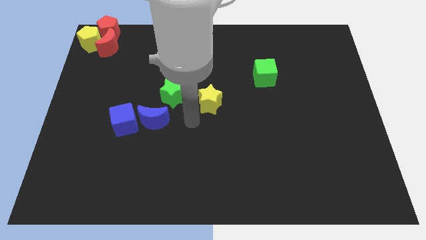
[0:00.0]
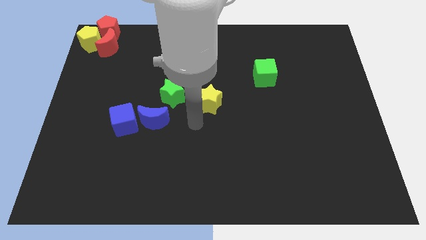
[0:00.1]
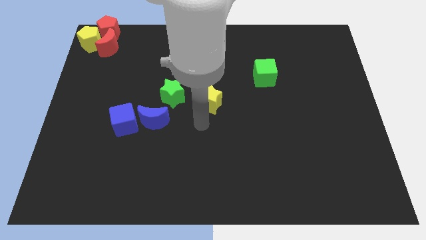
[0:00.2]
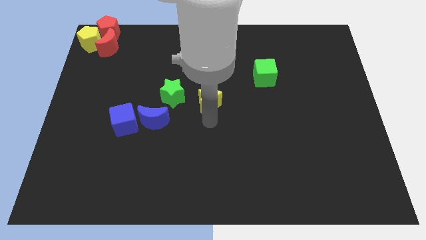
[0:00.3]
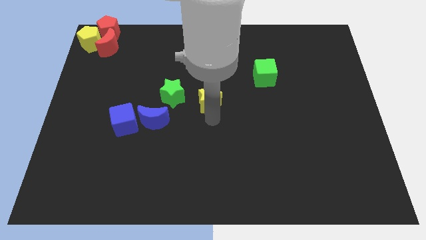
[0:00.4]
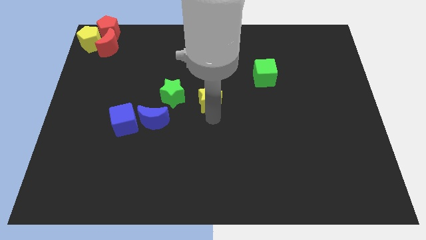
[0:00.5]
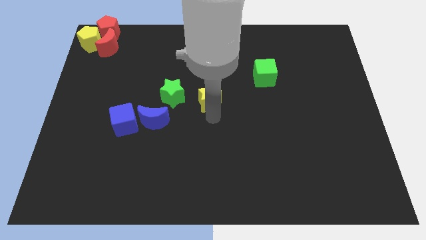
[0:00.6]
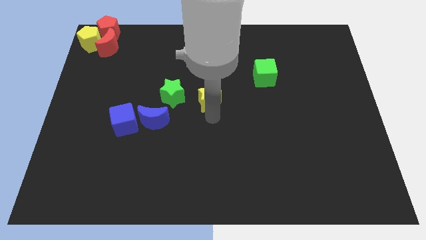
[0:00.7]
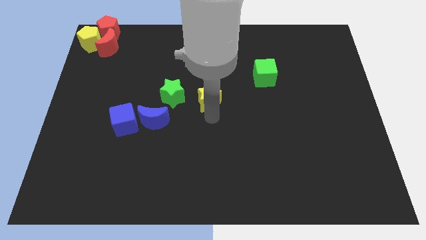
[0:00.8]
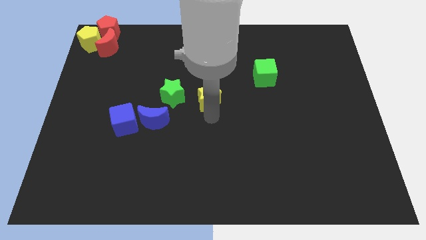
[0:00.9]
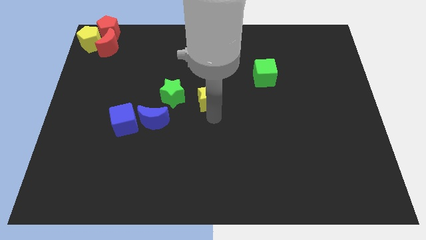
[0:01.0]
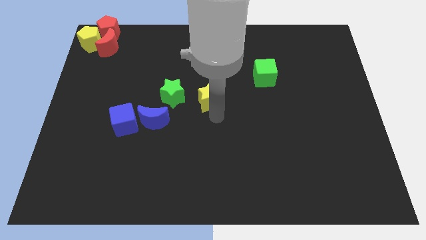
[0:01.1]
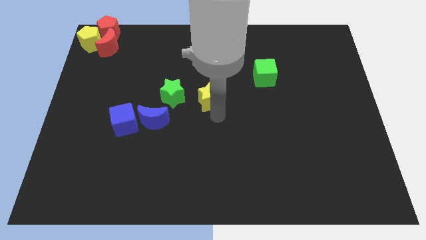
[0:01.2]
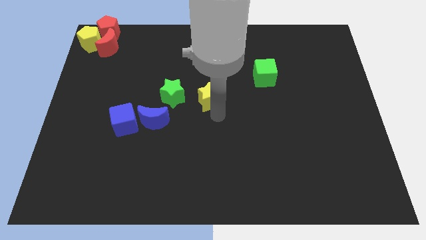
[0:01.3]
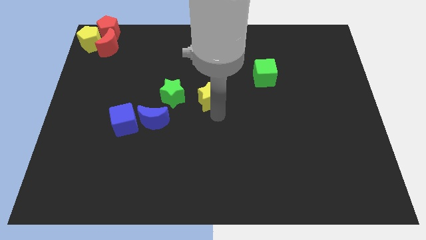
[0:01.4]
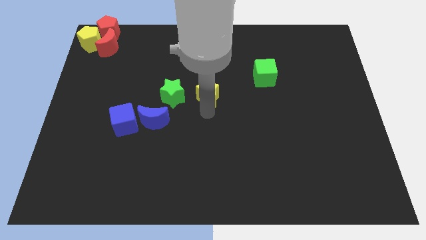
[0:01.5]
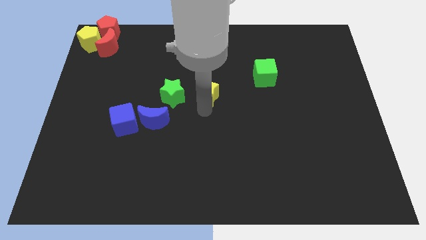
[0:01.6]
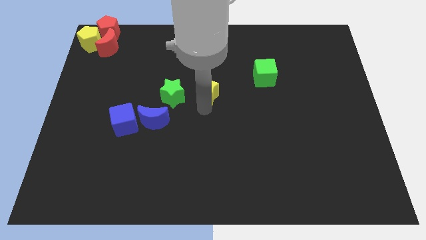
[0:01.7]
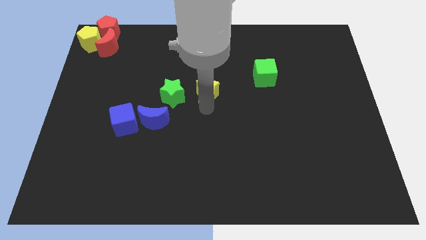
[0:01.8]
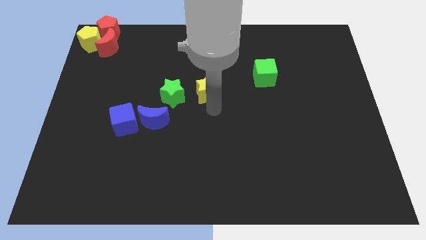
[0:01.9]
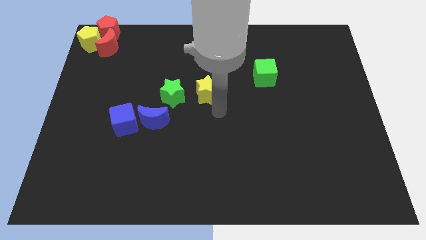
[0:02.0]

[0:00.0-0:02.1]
put the yellow star to the right of the green star

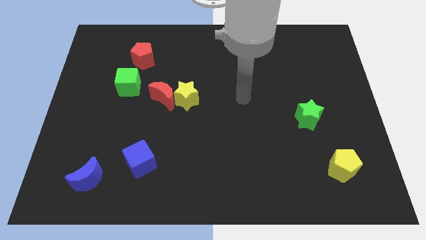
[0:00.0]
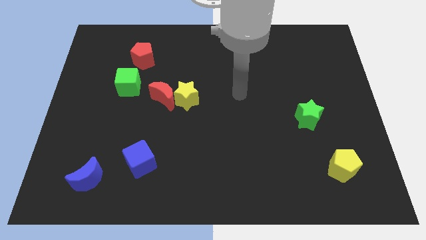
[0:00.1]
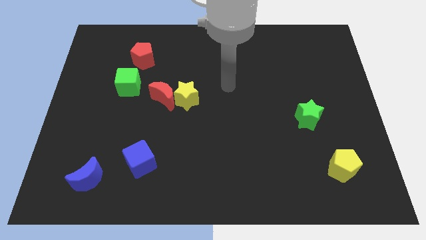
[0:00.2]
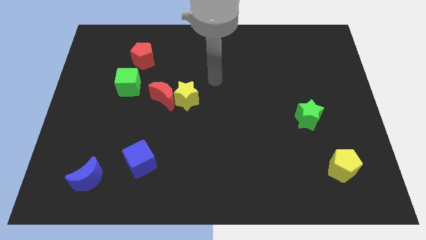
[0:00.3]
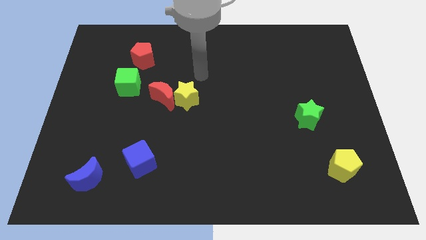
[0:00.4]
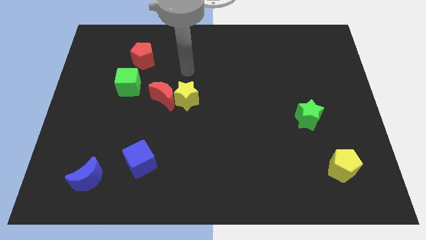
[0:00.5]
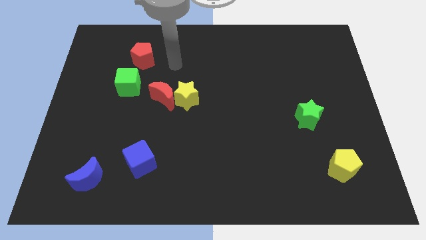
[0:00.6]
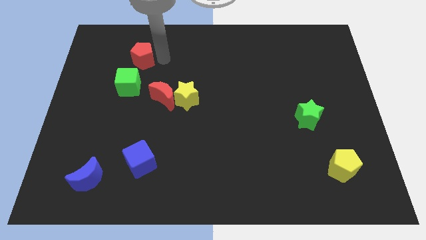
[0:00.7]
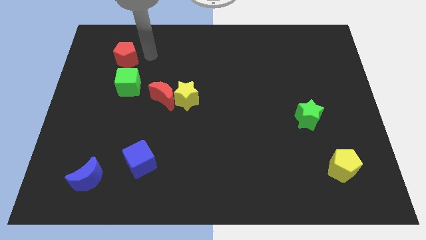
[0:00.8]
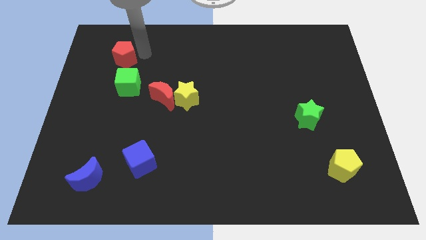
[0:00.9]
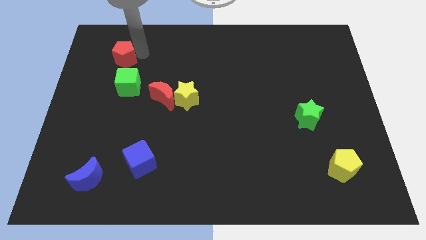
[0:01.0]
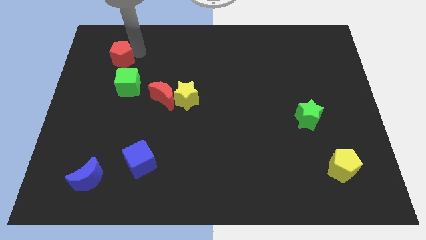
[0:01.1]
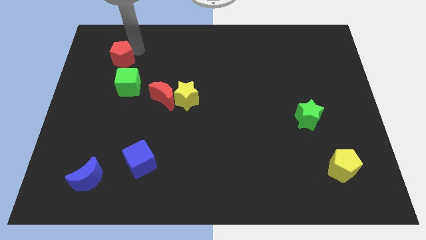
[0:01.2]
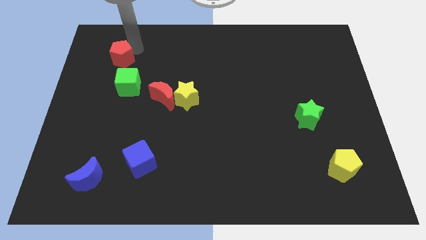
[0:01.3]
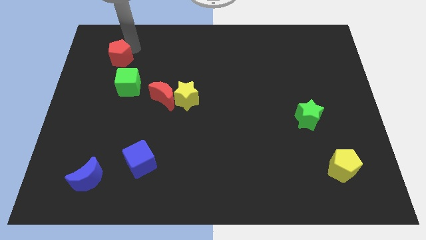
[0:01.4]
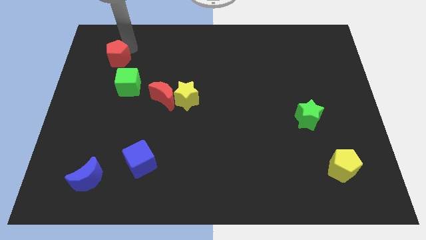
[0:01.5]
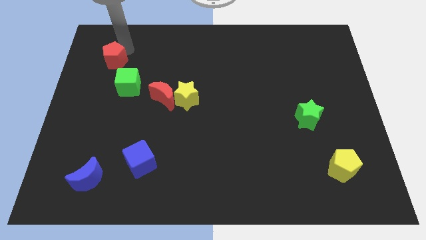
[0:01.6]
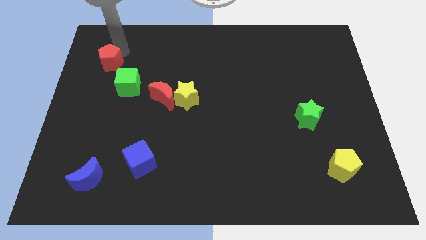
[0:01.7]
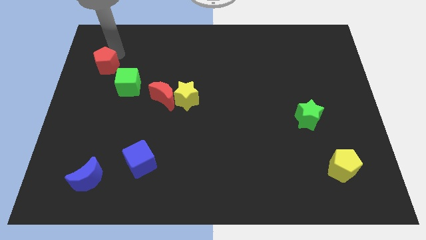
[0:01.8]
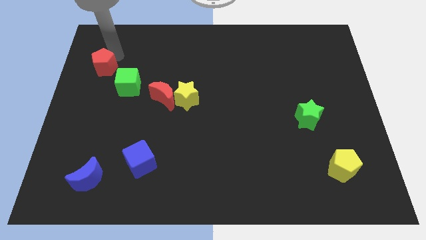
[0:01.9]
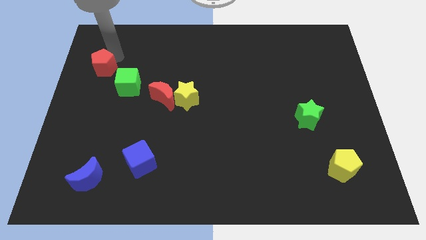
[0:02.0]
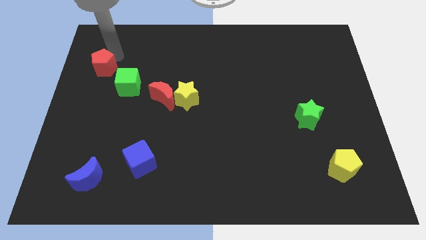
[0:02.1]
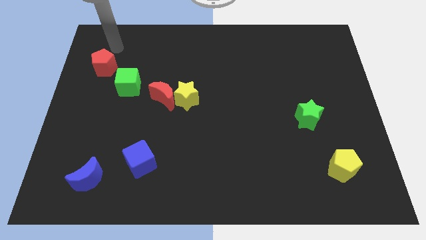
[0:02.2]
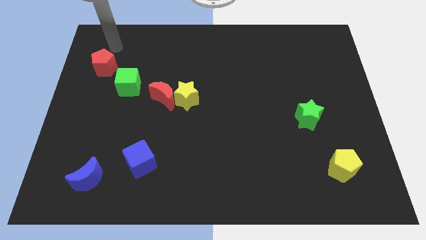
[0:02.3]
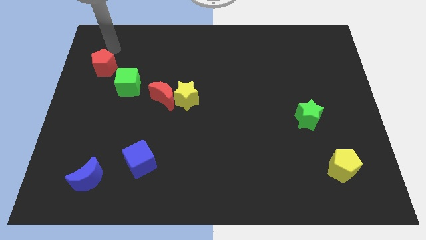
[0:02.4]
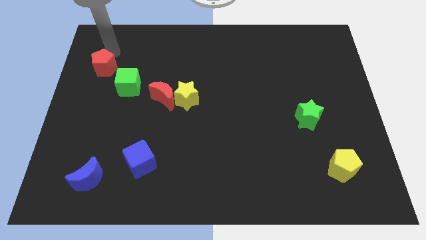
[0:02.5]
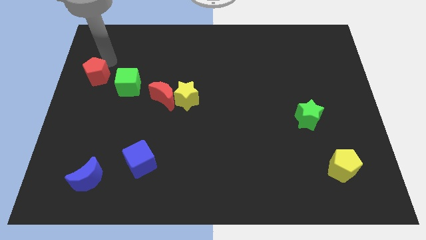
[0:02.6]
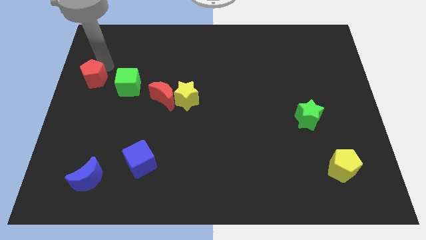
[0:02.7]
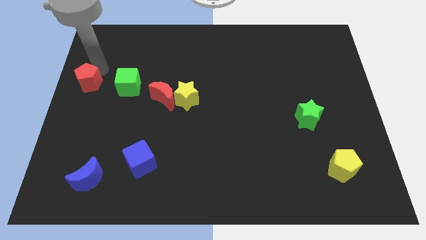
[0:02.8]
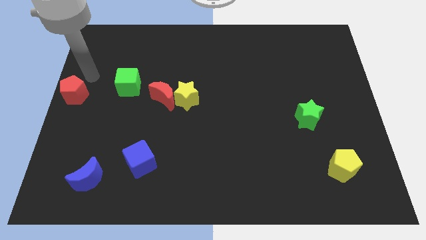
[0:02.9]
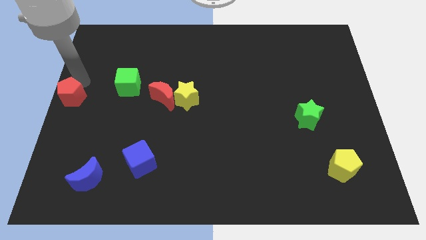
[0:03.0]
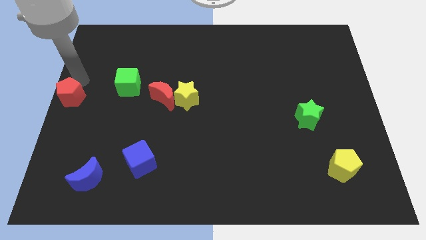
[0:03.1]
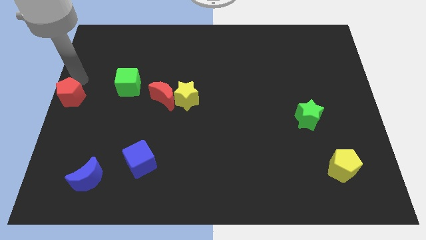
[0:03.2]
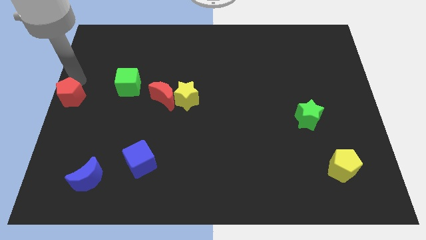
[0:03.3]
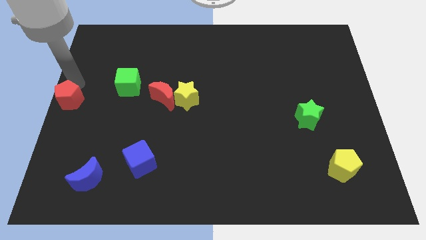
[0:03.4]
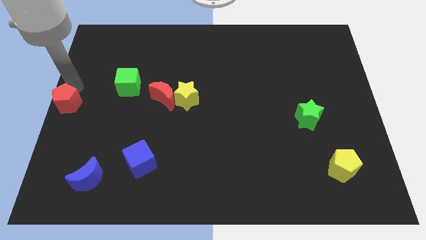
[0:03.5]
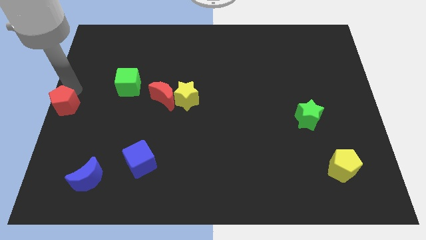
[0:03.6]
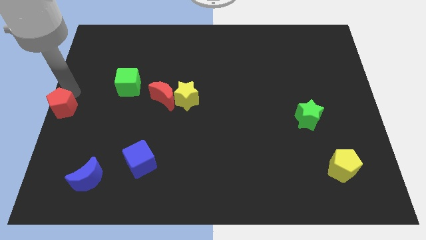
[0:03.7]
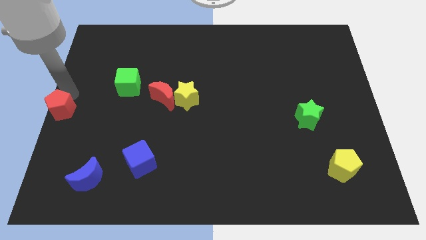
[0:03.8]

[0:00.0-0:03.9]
place the red pentagon at the left center of the board

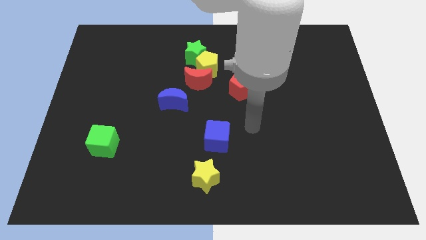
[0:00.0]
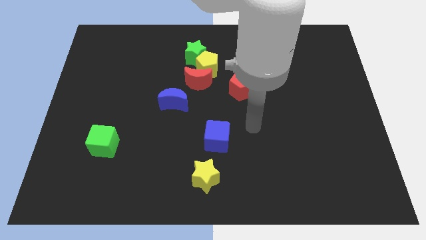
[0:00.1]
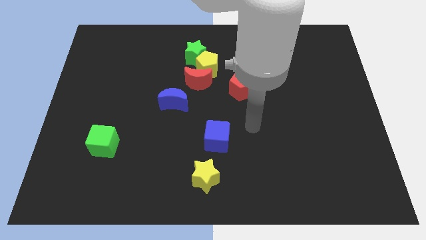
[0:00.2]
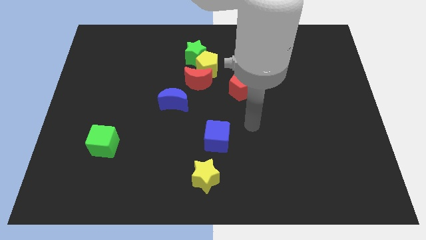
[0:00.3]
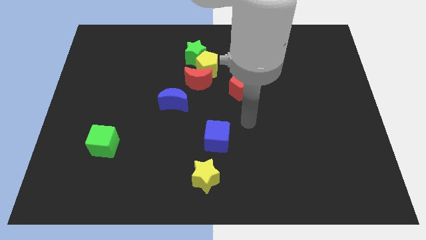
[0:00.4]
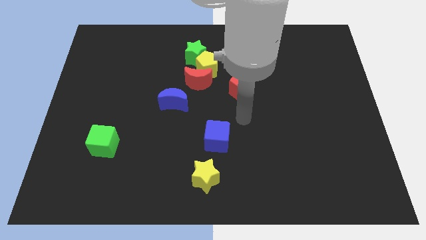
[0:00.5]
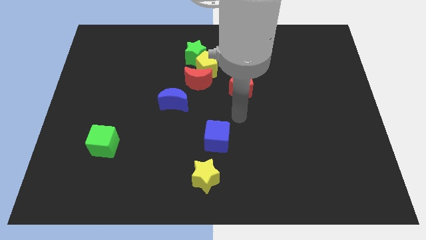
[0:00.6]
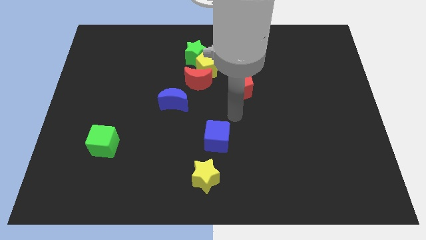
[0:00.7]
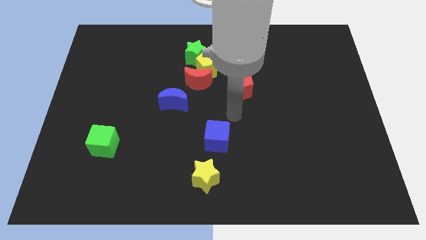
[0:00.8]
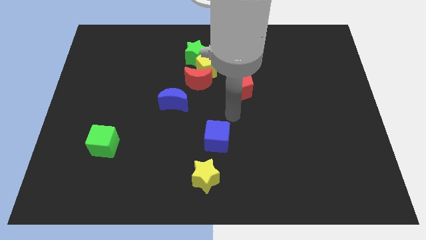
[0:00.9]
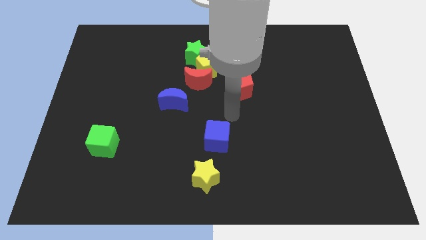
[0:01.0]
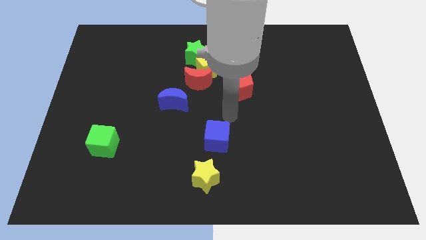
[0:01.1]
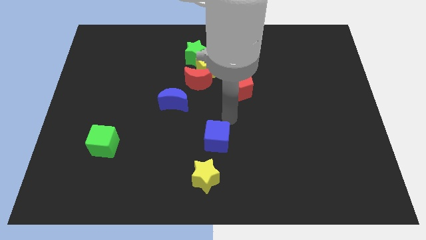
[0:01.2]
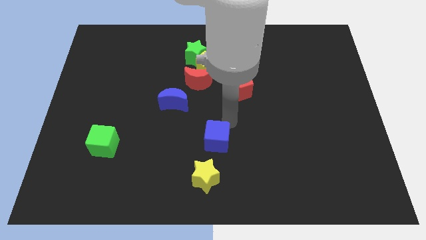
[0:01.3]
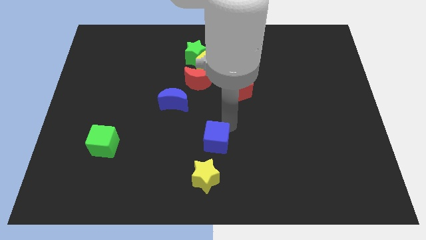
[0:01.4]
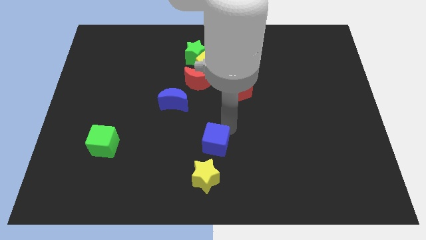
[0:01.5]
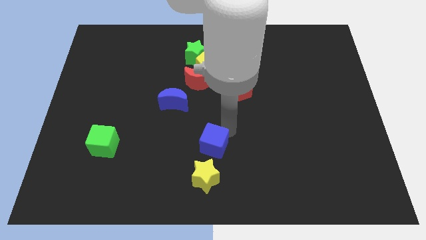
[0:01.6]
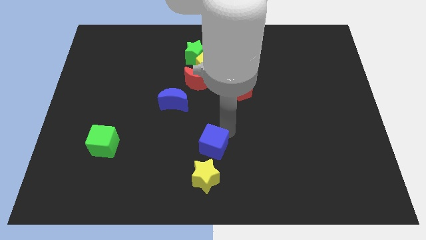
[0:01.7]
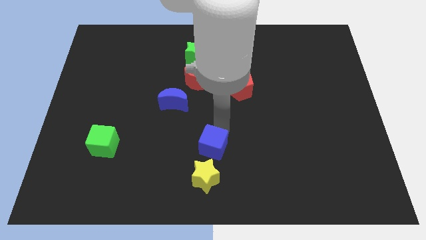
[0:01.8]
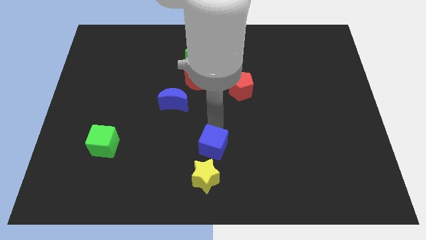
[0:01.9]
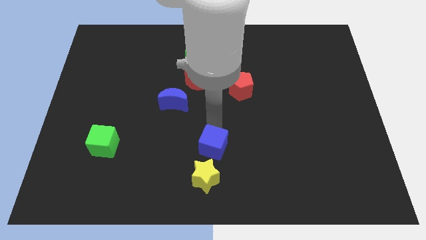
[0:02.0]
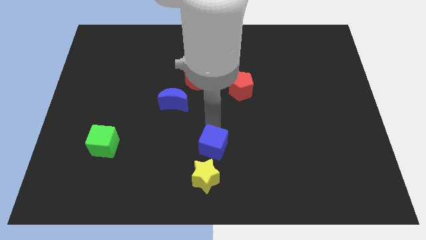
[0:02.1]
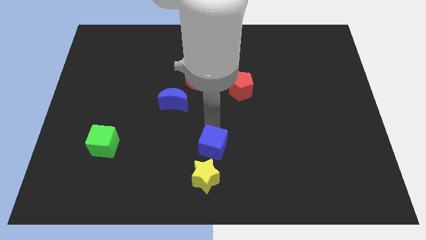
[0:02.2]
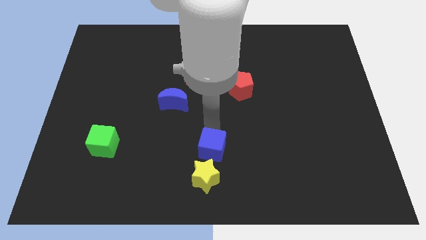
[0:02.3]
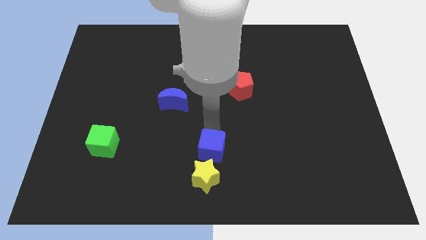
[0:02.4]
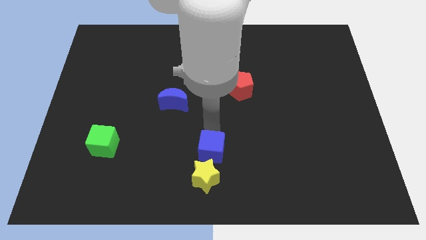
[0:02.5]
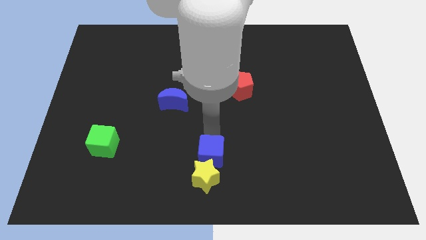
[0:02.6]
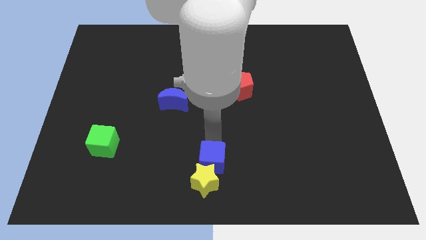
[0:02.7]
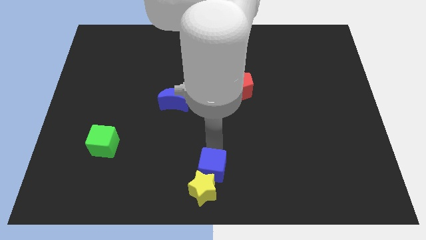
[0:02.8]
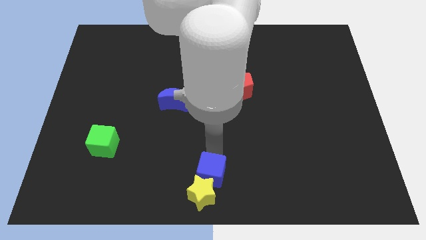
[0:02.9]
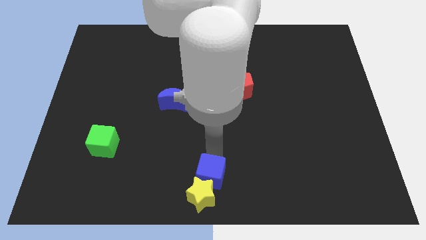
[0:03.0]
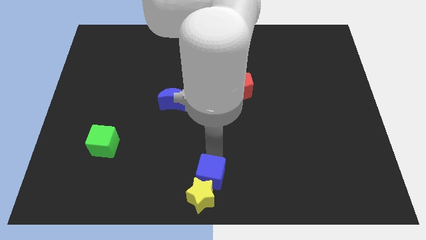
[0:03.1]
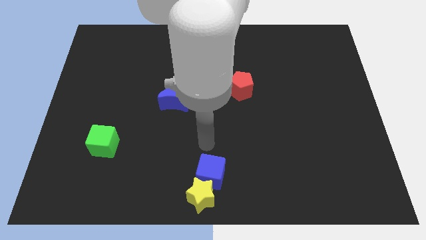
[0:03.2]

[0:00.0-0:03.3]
push the blue cube along with the yellow star to the bottom center of the board
